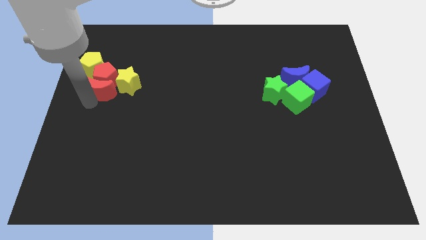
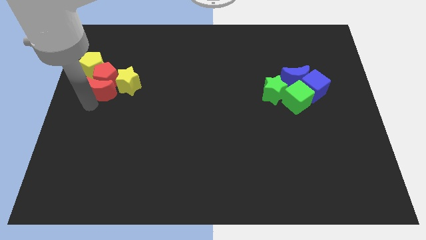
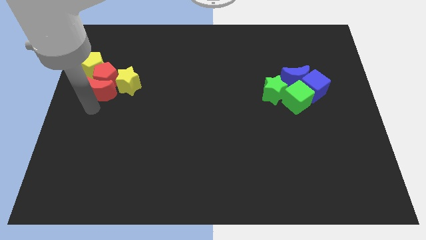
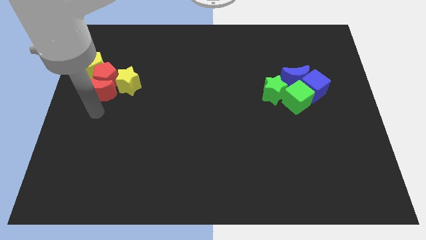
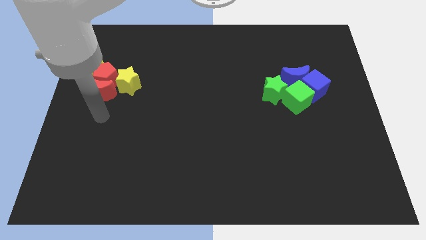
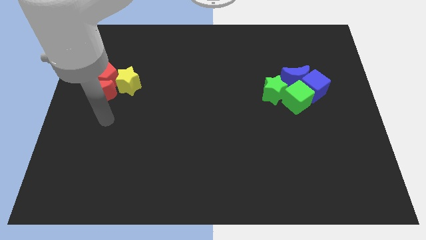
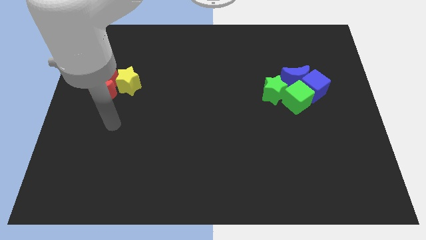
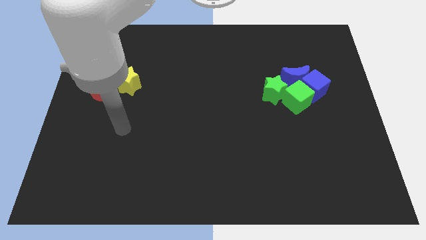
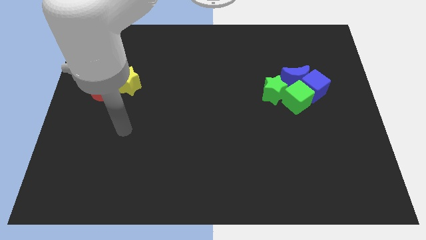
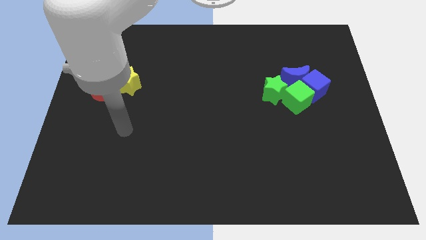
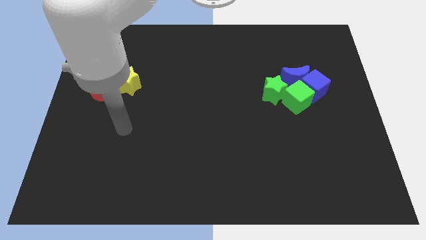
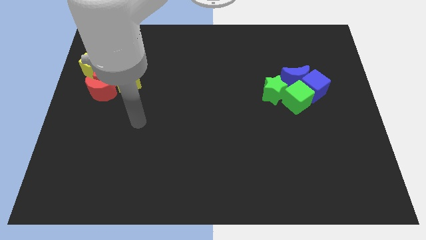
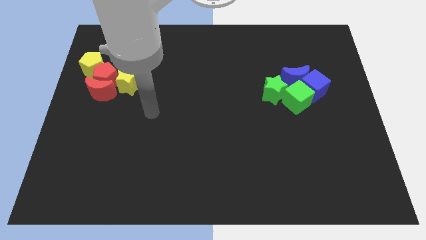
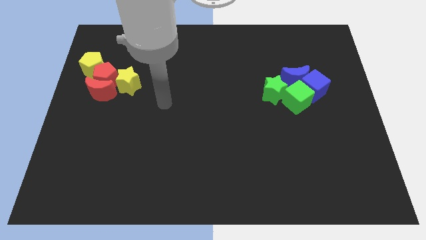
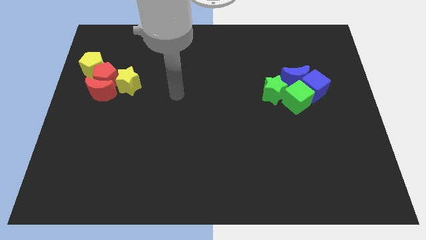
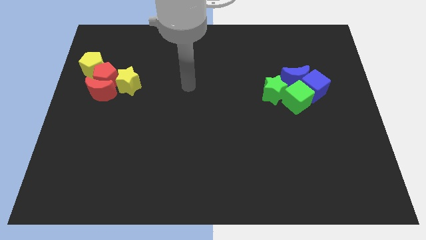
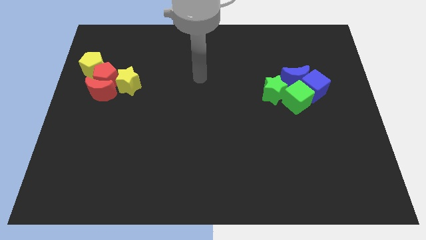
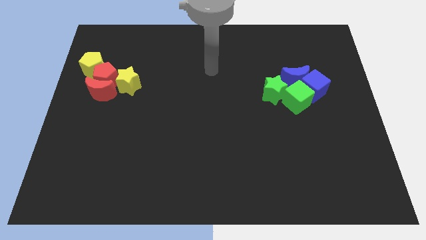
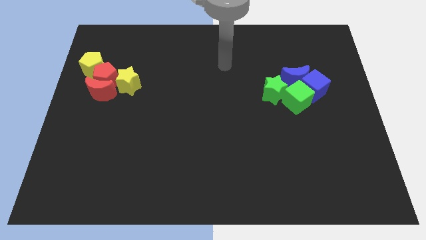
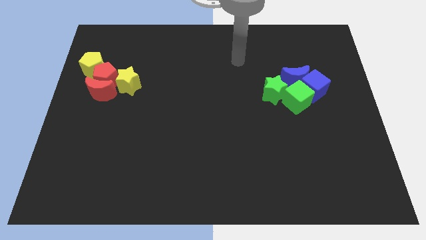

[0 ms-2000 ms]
move your arm away from the red moon

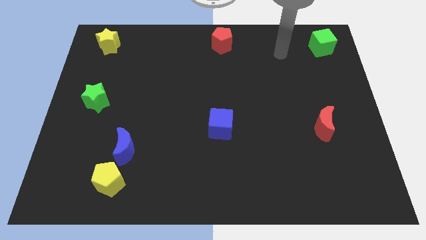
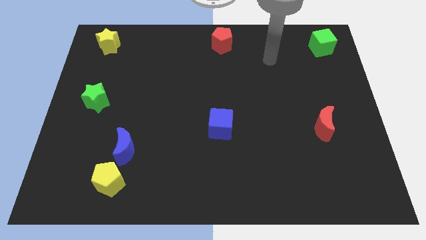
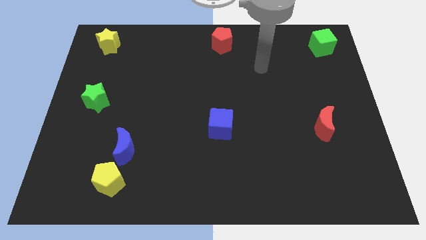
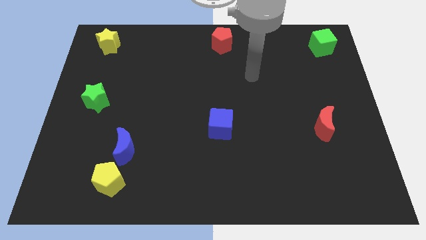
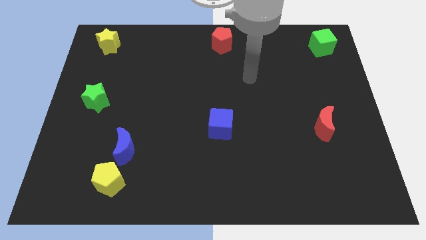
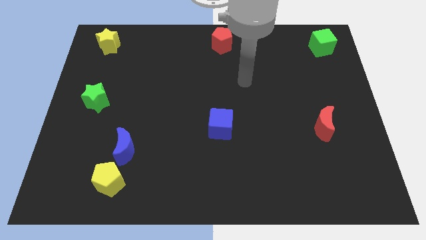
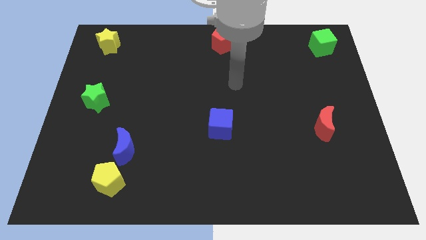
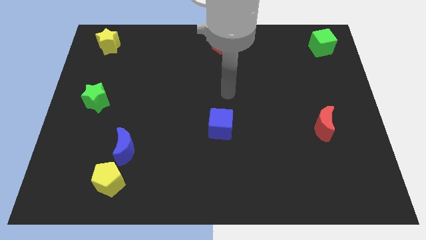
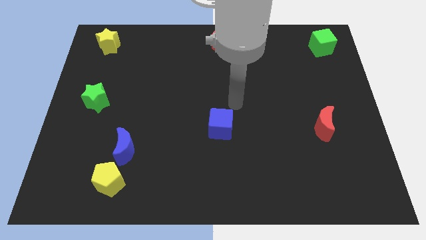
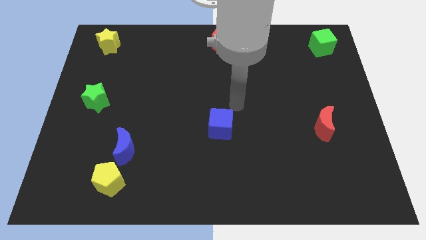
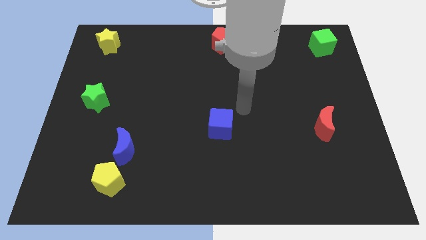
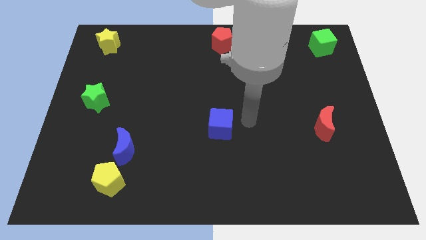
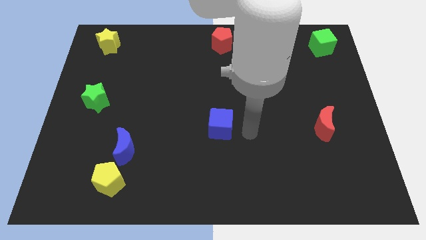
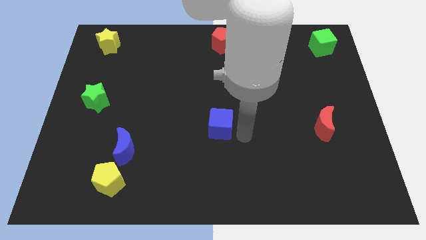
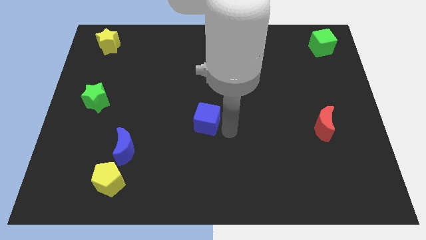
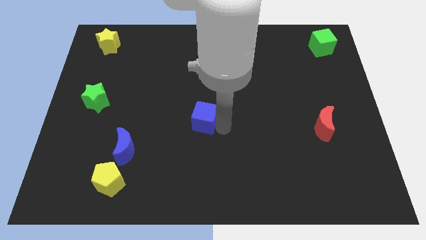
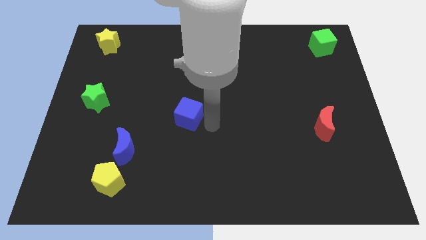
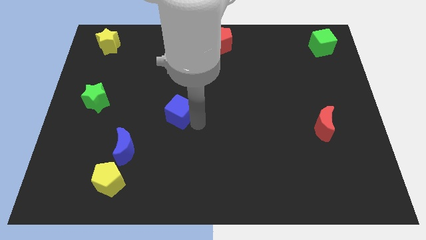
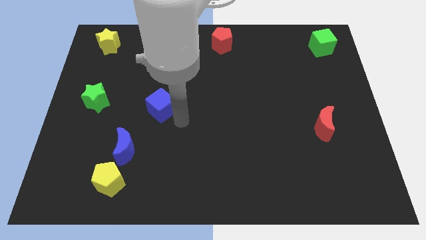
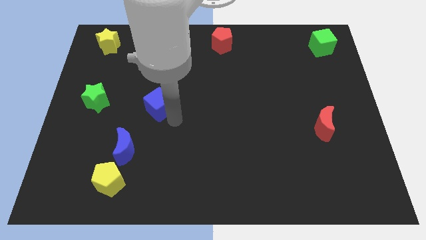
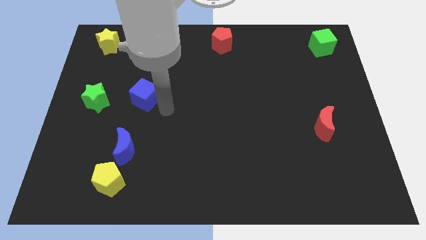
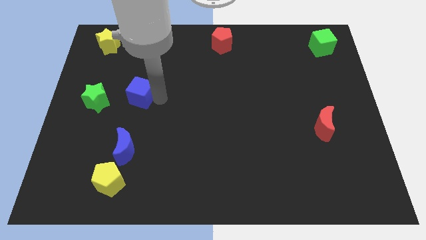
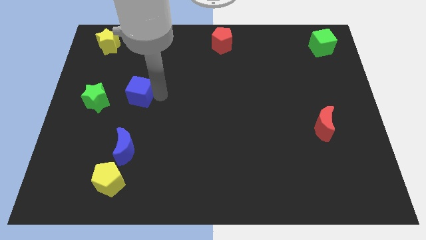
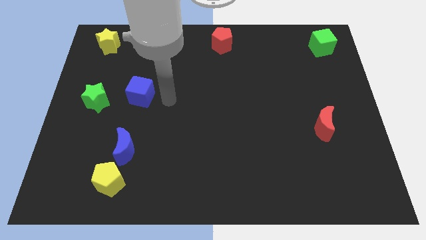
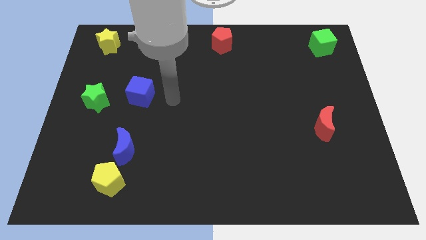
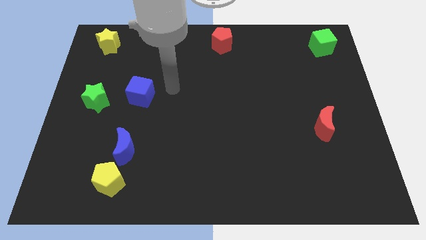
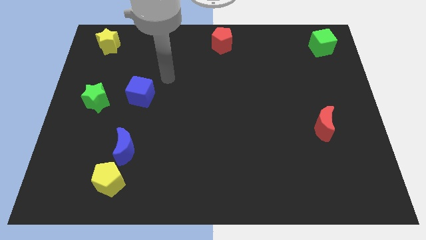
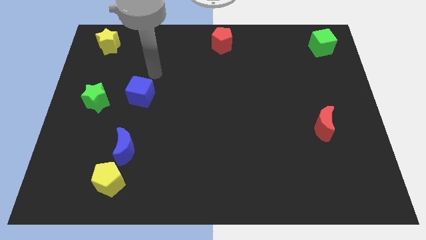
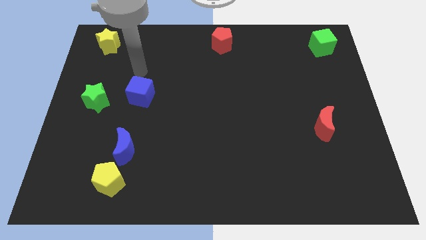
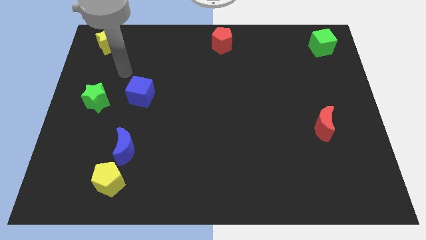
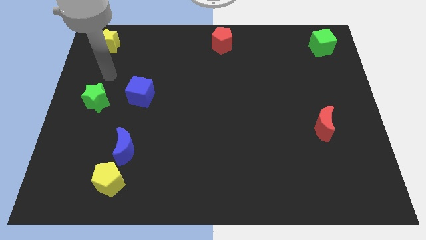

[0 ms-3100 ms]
place the blue cube to the right of the green star

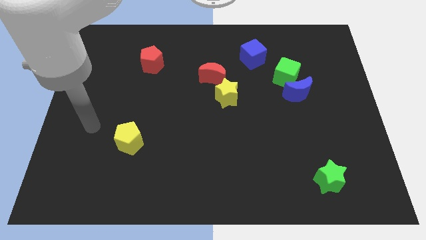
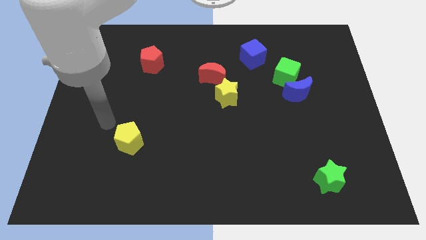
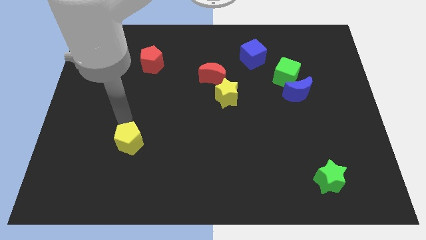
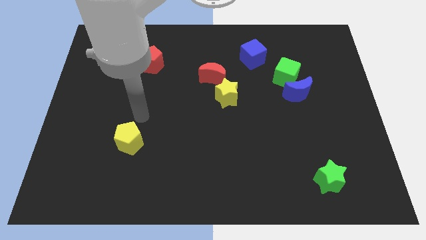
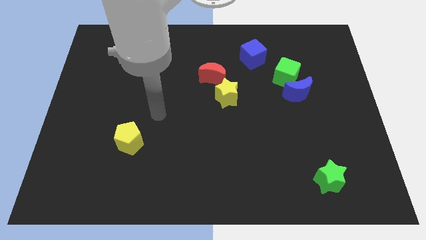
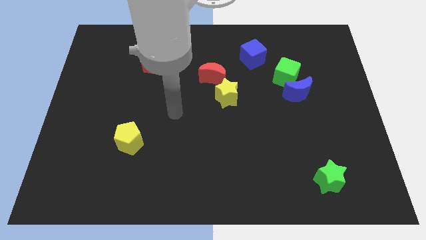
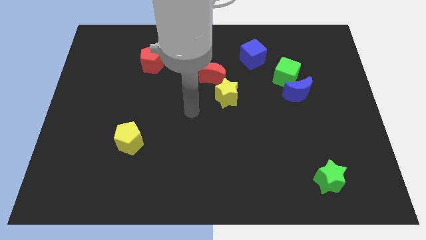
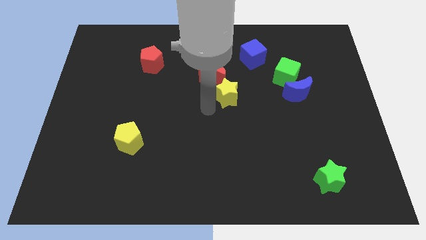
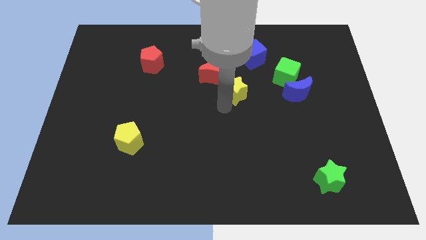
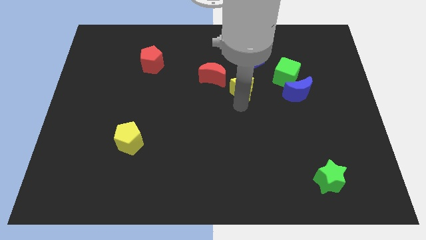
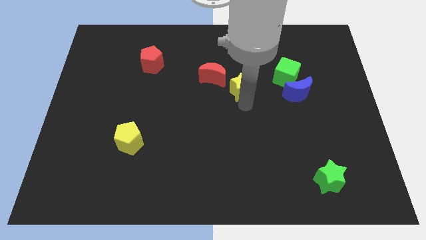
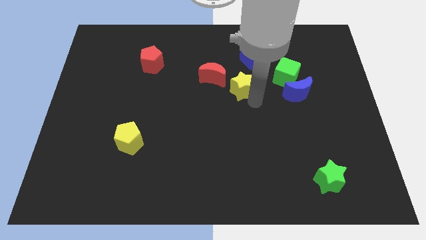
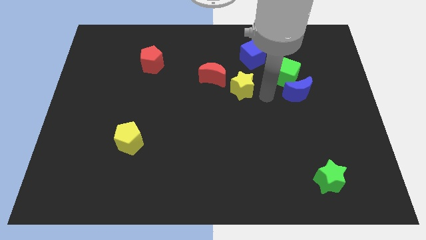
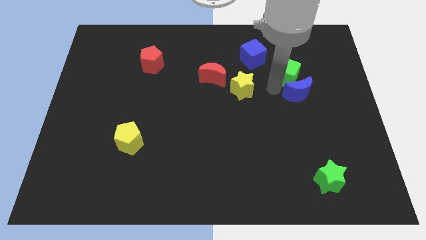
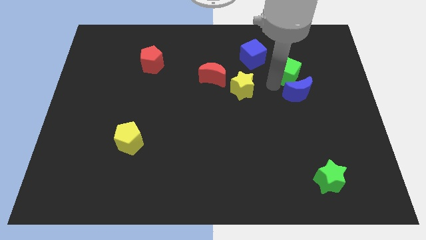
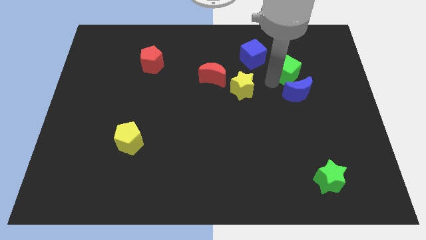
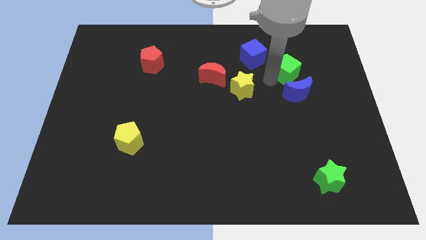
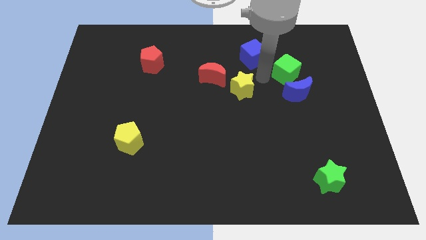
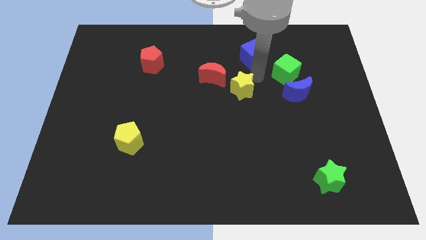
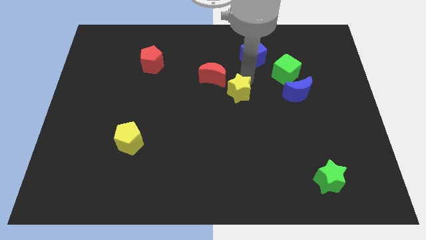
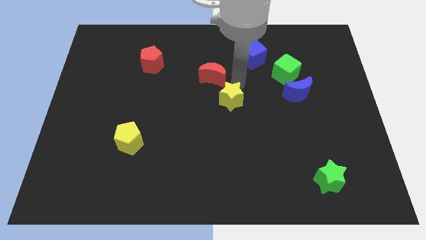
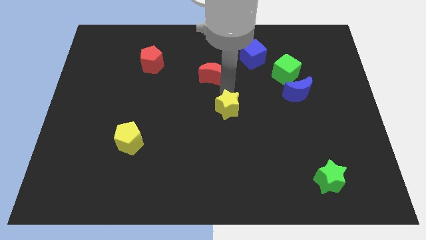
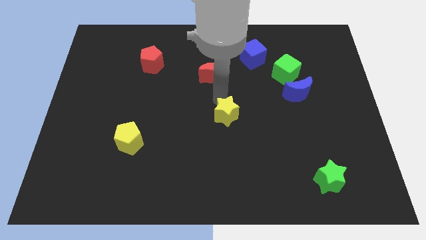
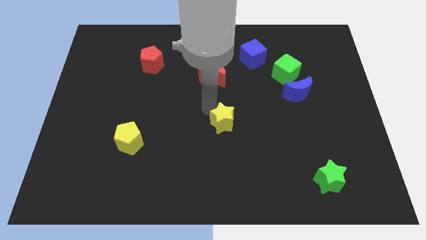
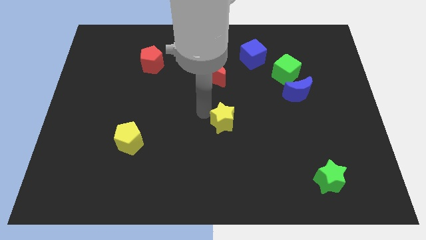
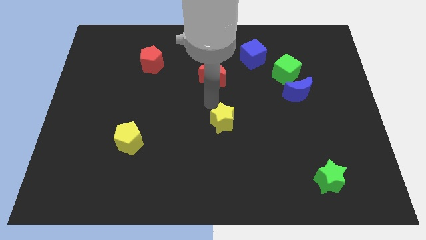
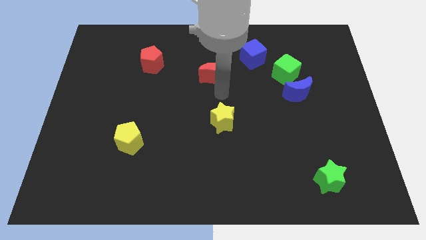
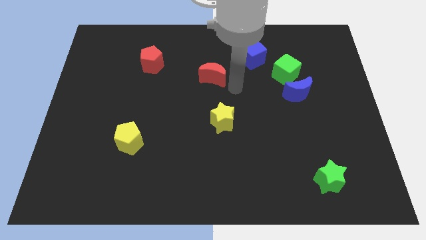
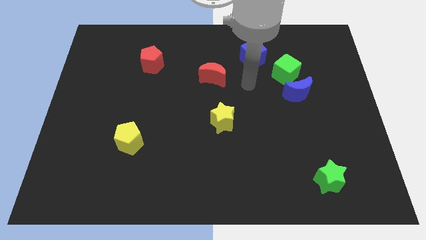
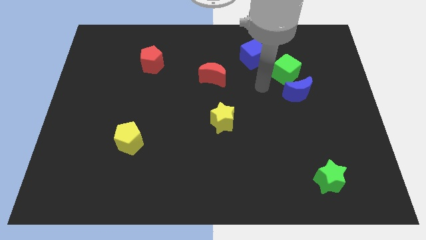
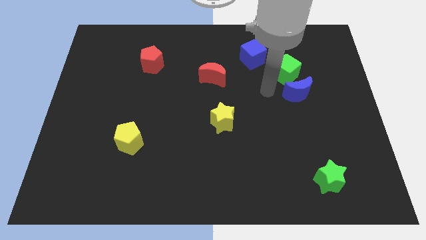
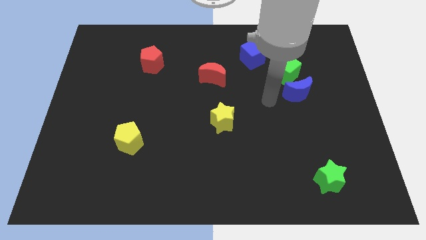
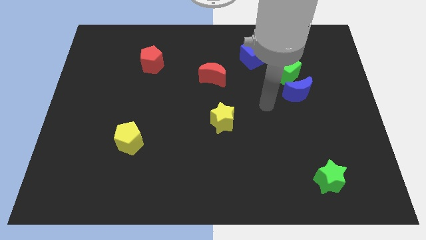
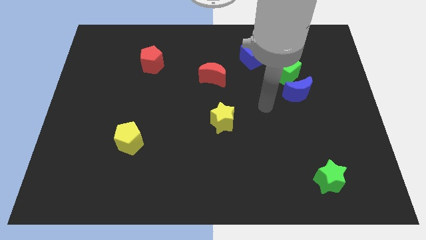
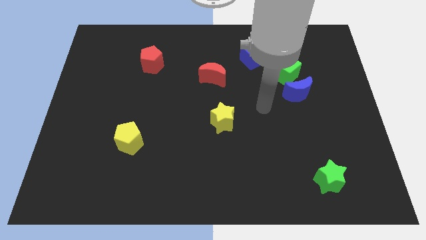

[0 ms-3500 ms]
place yellow pentagon towards middle of the board

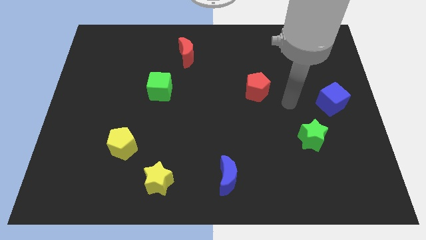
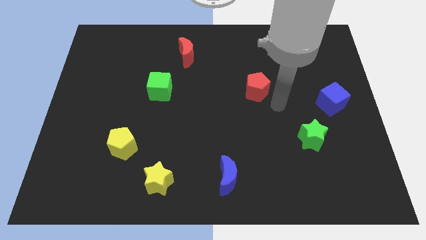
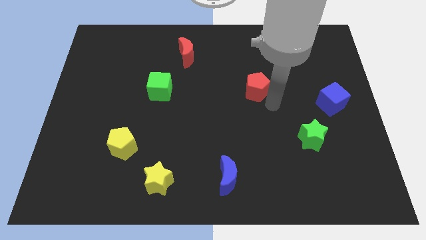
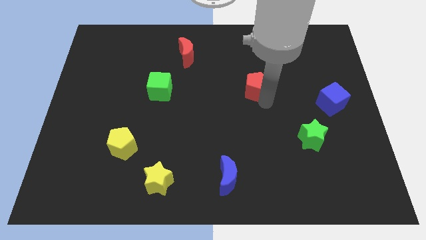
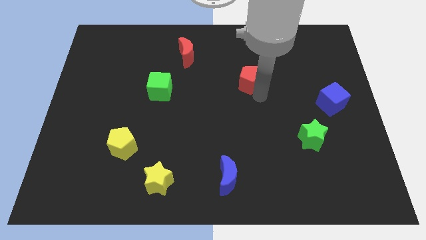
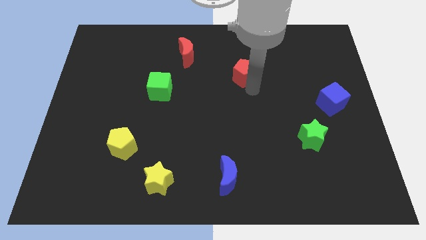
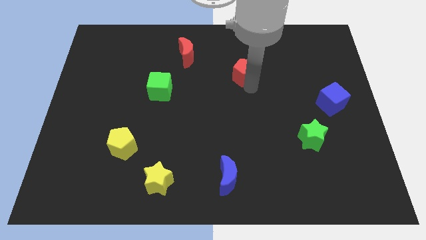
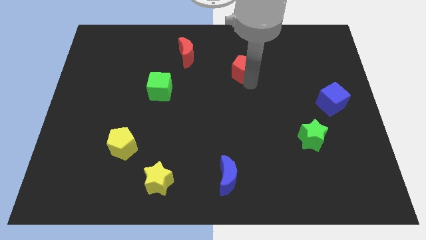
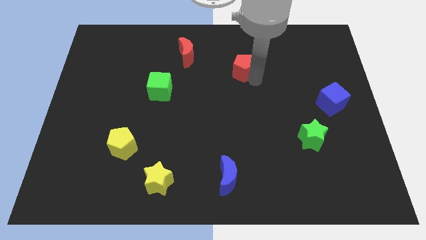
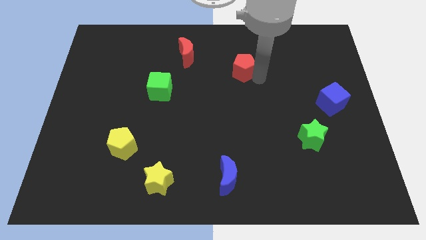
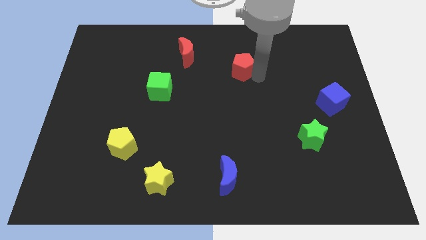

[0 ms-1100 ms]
move the red pentagon to the top of the board
